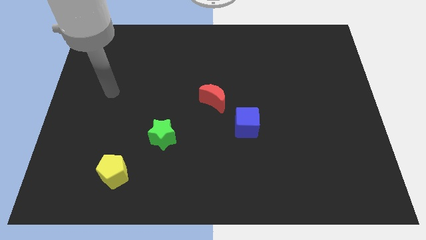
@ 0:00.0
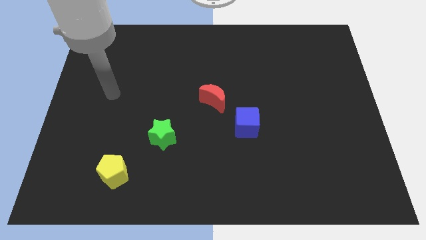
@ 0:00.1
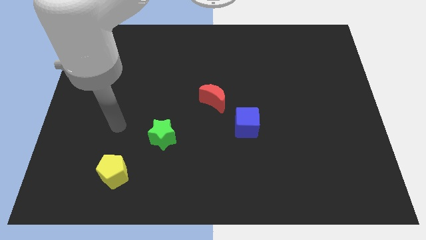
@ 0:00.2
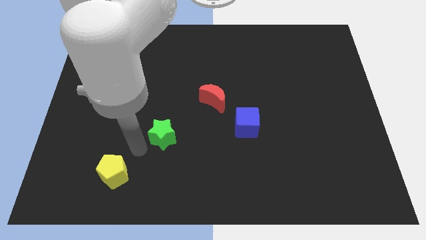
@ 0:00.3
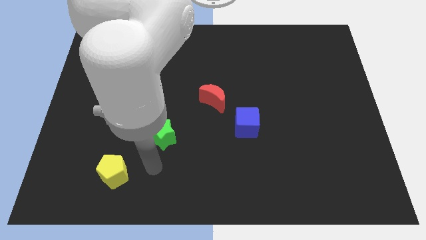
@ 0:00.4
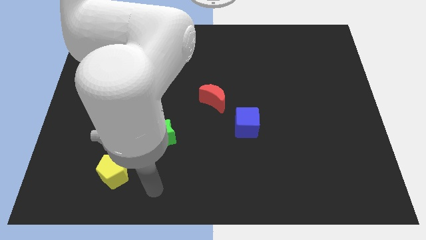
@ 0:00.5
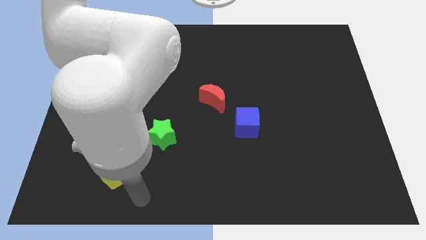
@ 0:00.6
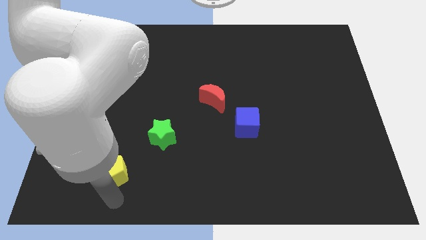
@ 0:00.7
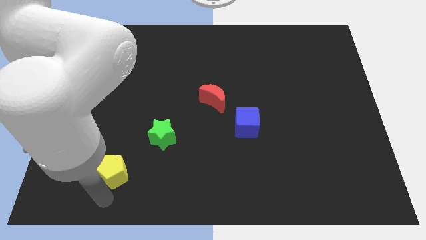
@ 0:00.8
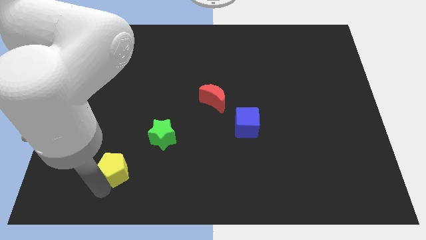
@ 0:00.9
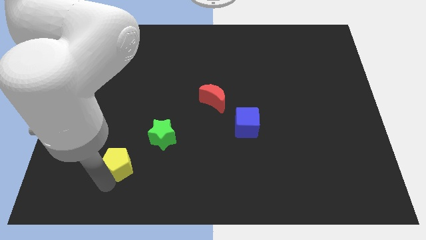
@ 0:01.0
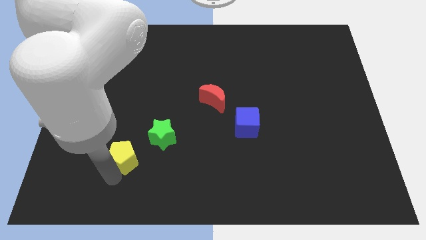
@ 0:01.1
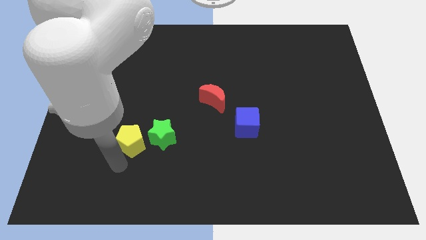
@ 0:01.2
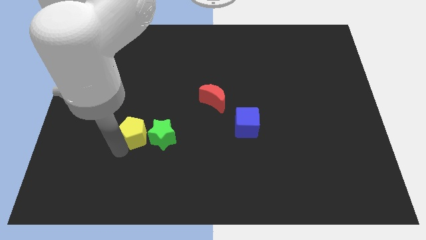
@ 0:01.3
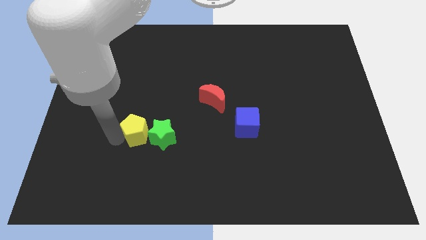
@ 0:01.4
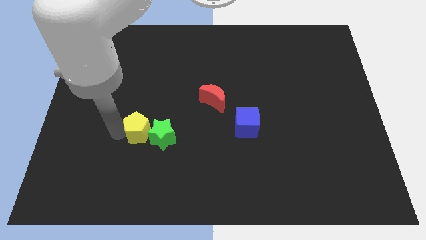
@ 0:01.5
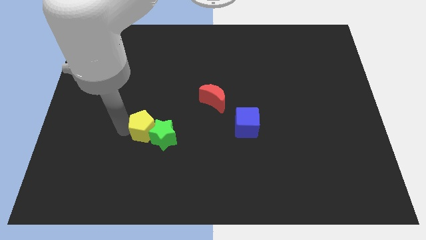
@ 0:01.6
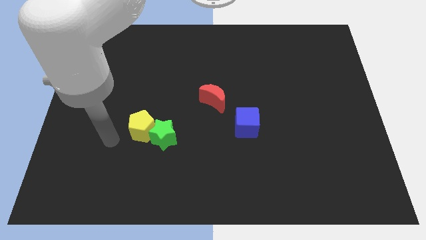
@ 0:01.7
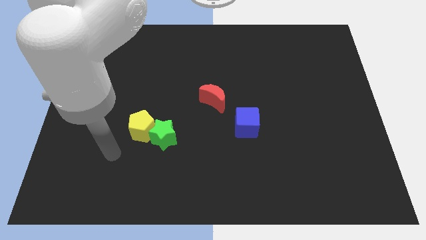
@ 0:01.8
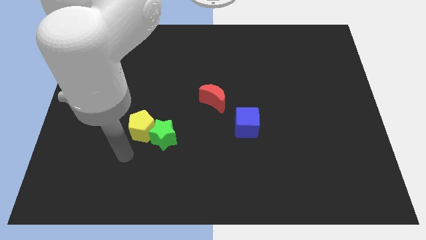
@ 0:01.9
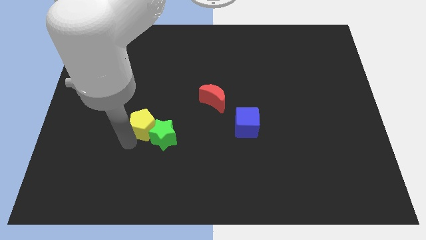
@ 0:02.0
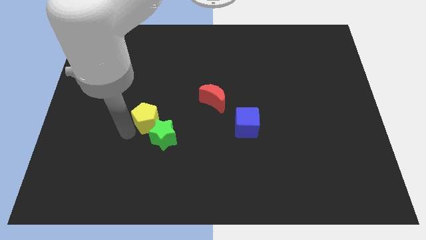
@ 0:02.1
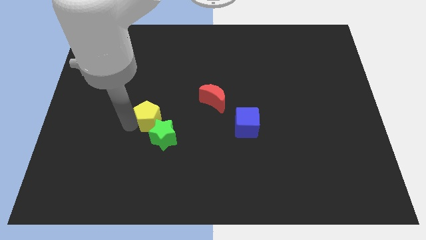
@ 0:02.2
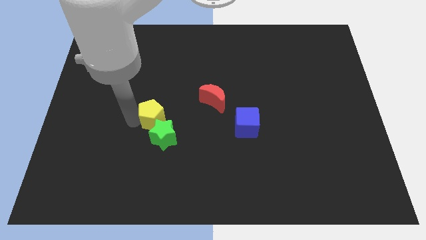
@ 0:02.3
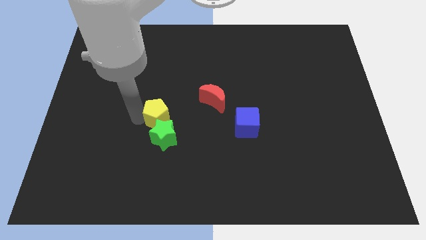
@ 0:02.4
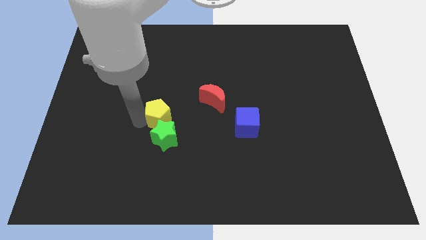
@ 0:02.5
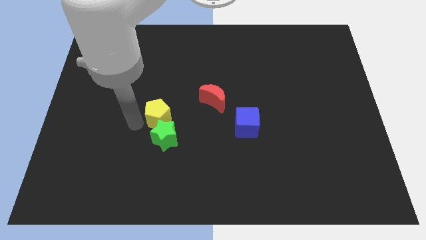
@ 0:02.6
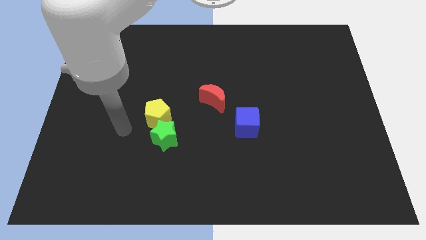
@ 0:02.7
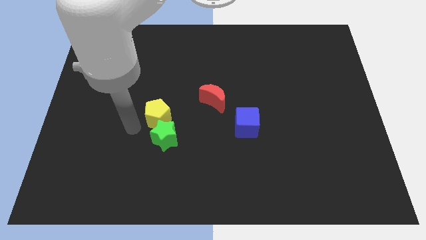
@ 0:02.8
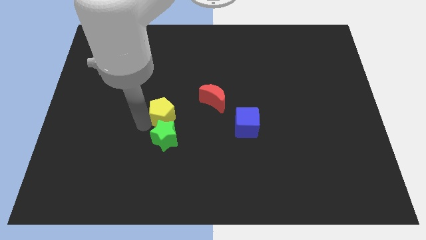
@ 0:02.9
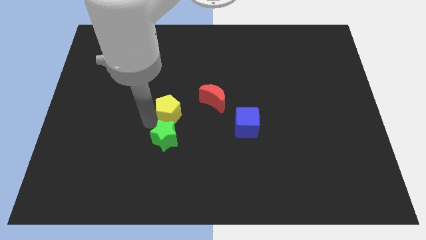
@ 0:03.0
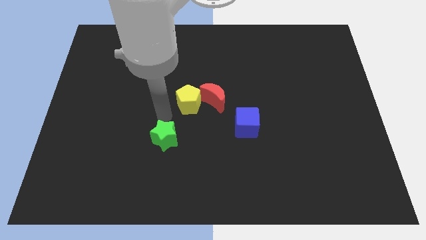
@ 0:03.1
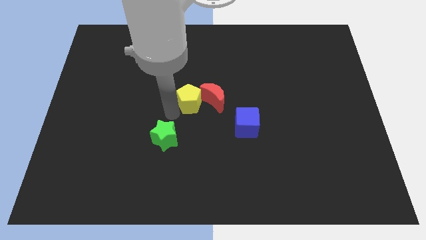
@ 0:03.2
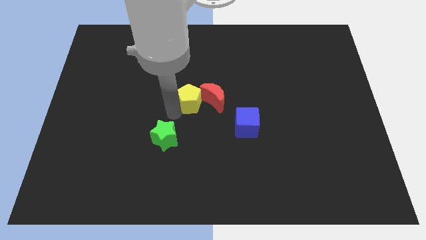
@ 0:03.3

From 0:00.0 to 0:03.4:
put the pentagon close to the red block

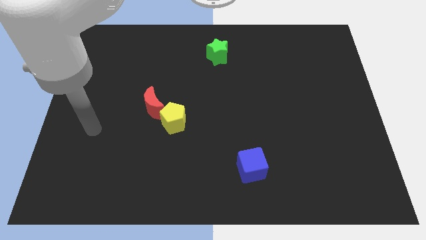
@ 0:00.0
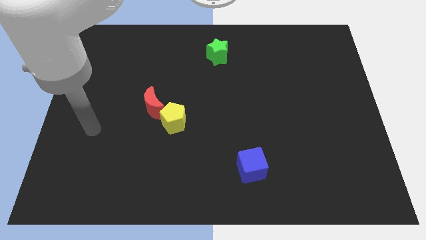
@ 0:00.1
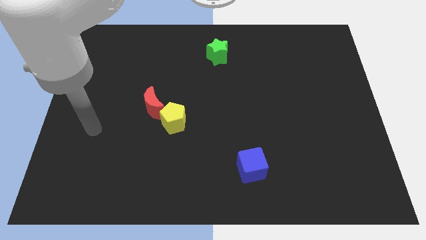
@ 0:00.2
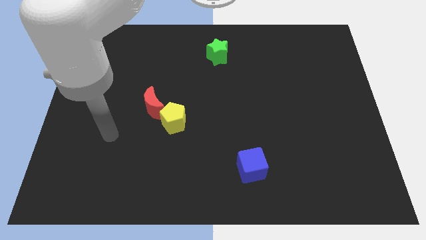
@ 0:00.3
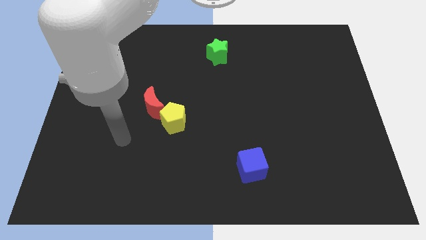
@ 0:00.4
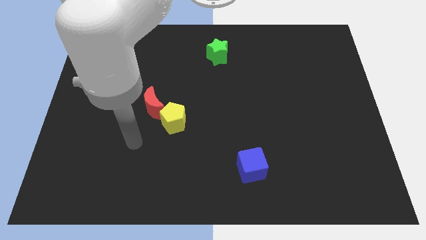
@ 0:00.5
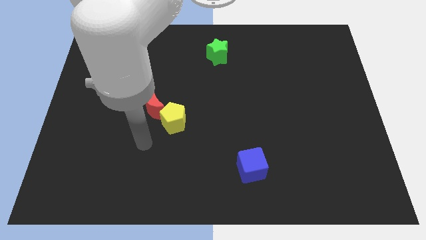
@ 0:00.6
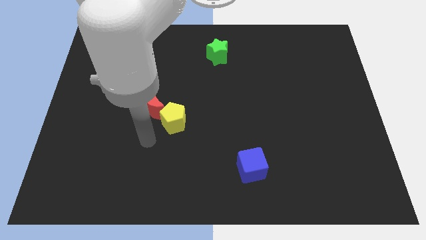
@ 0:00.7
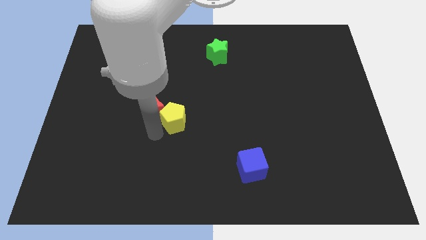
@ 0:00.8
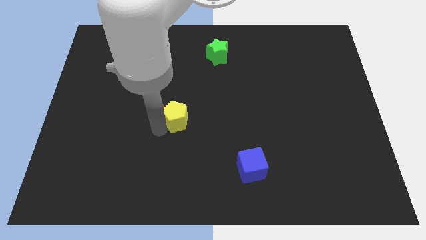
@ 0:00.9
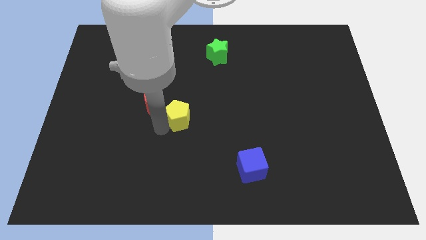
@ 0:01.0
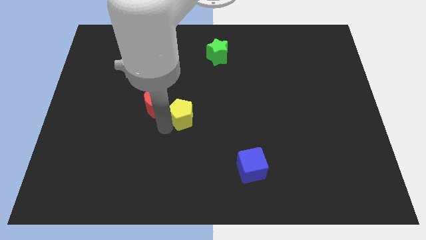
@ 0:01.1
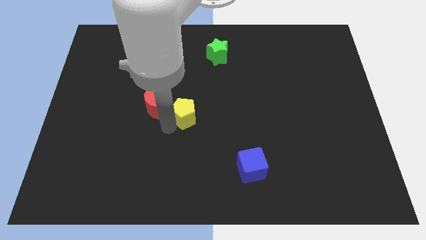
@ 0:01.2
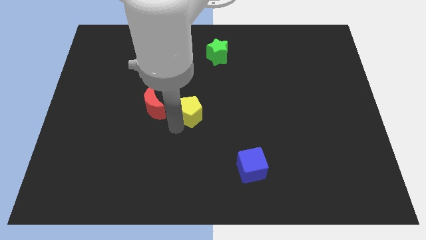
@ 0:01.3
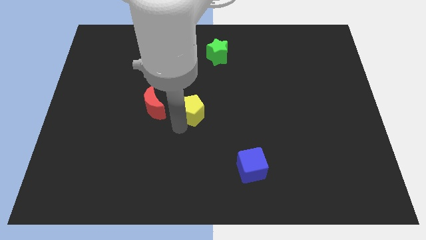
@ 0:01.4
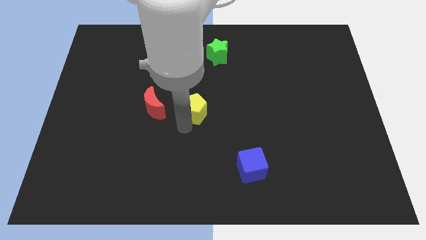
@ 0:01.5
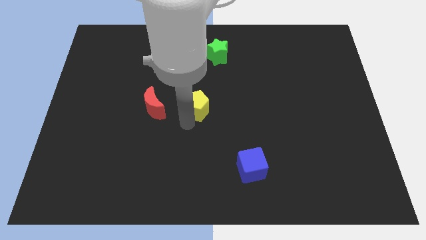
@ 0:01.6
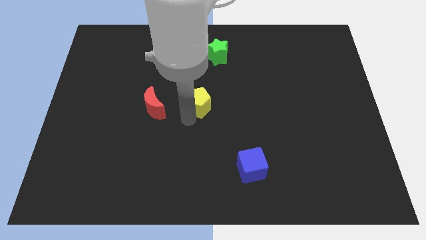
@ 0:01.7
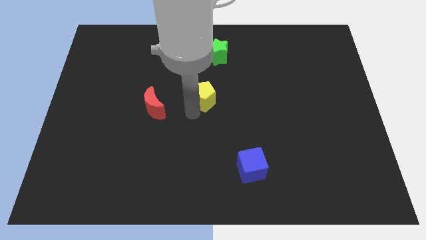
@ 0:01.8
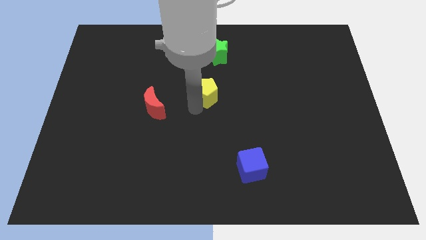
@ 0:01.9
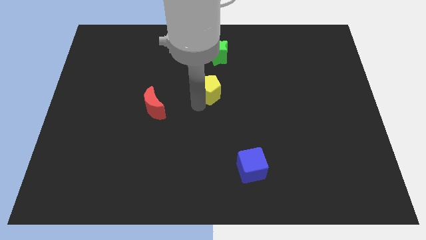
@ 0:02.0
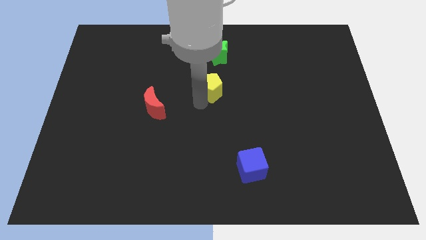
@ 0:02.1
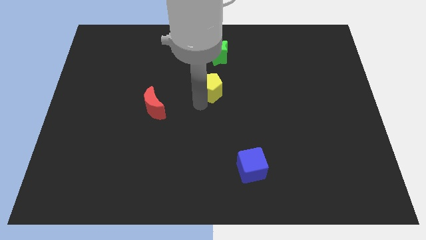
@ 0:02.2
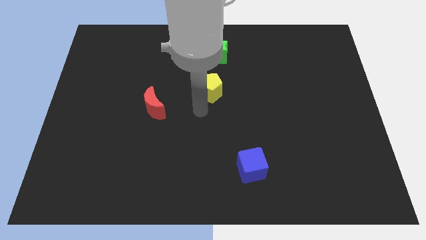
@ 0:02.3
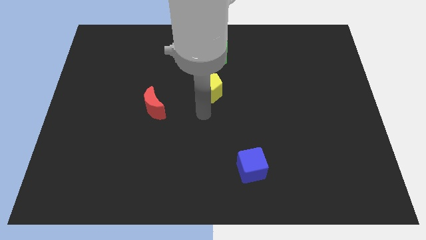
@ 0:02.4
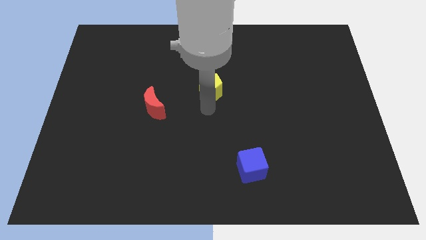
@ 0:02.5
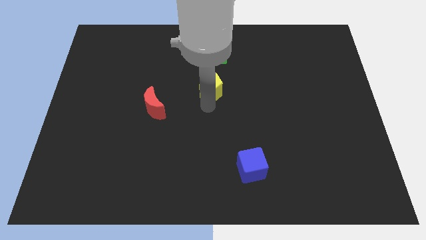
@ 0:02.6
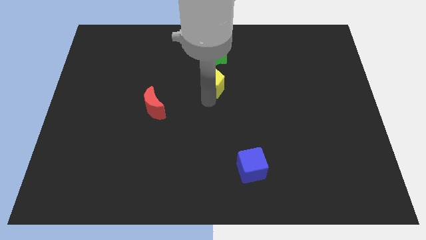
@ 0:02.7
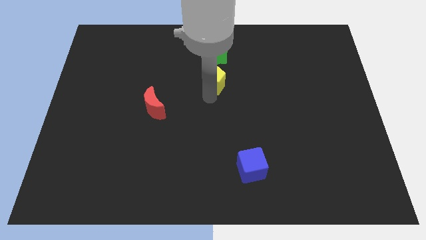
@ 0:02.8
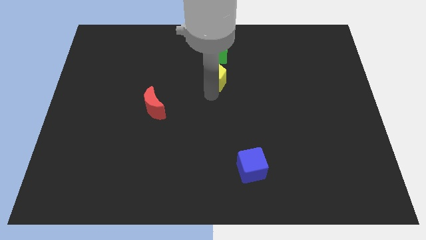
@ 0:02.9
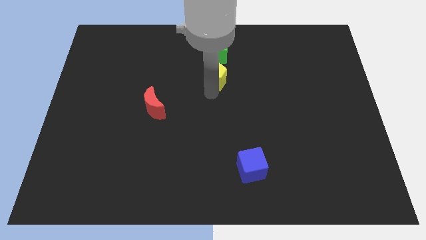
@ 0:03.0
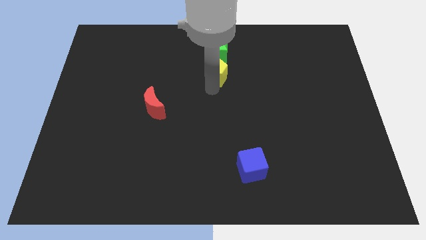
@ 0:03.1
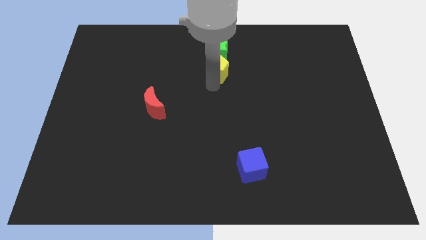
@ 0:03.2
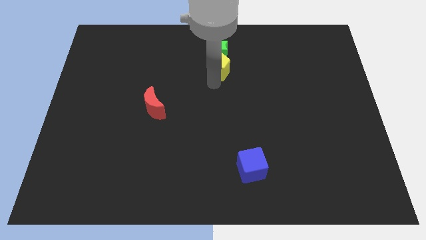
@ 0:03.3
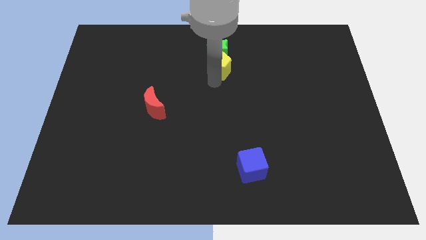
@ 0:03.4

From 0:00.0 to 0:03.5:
slide the yellow pentagon towards the green star

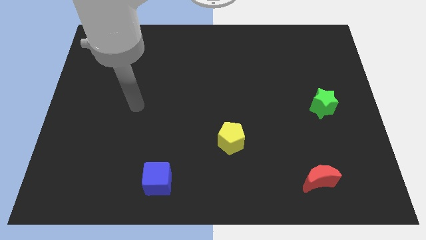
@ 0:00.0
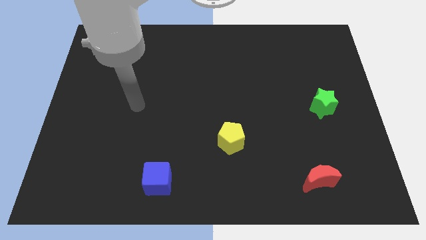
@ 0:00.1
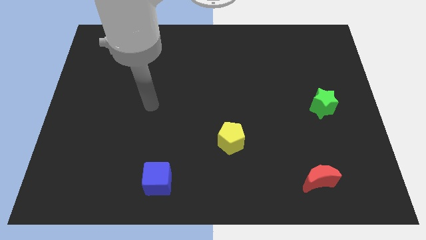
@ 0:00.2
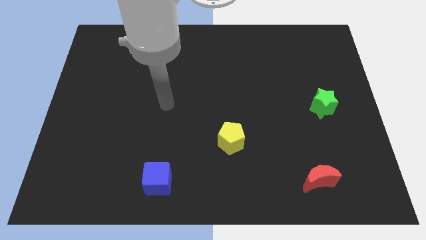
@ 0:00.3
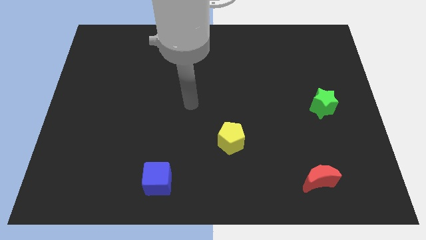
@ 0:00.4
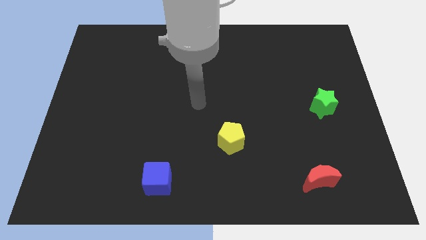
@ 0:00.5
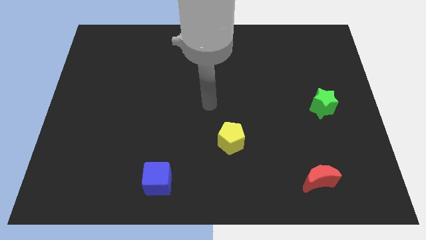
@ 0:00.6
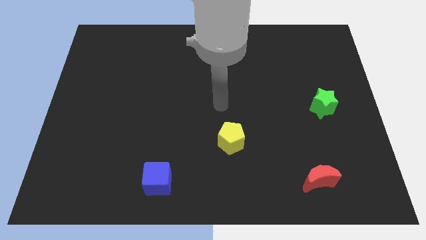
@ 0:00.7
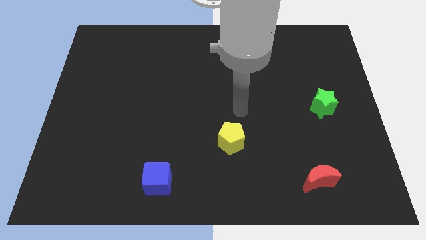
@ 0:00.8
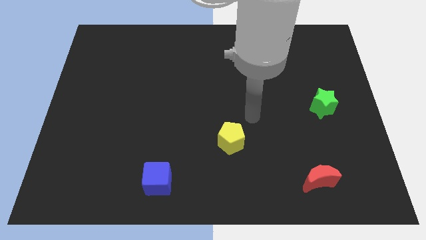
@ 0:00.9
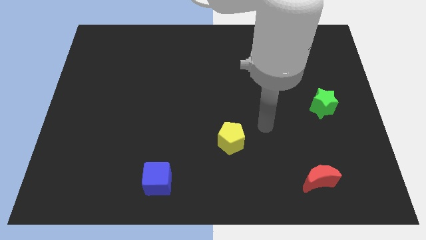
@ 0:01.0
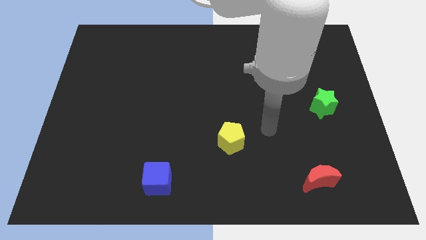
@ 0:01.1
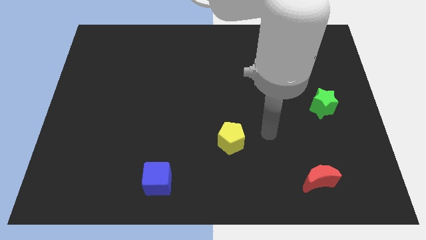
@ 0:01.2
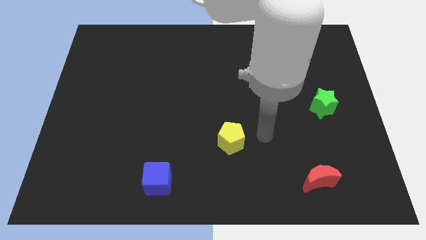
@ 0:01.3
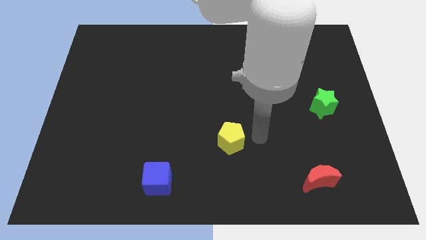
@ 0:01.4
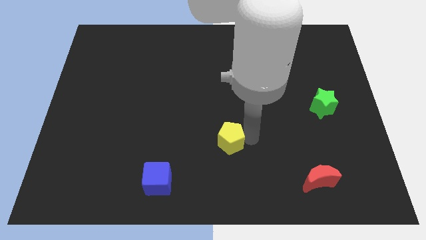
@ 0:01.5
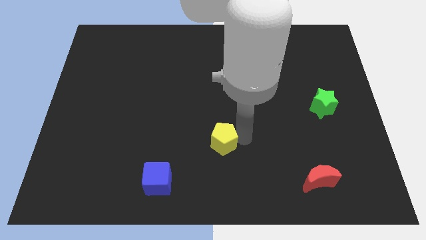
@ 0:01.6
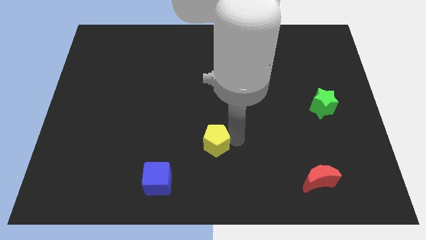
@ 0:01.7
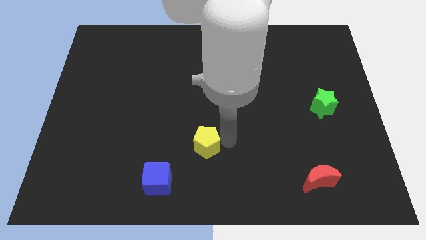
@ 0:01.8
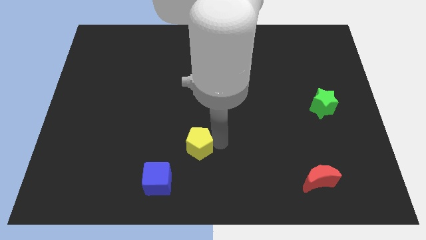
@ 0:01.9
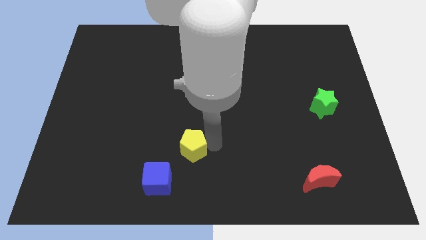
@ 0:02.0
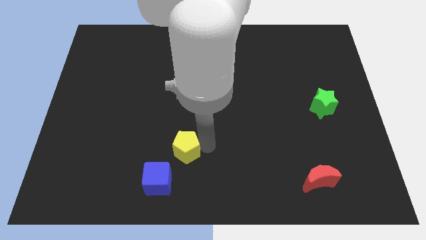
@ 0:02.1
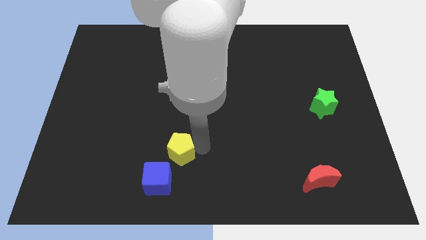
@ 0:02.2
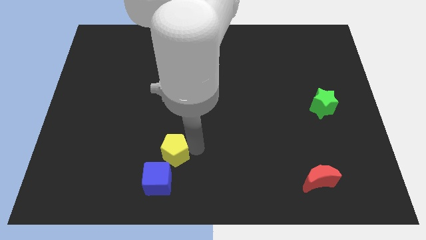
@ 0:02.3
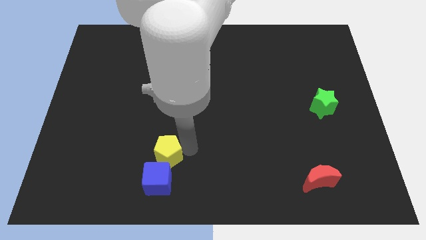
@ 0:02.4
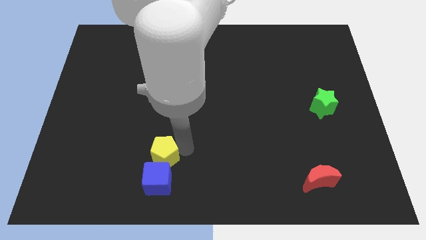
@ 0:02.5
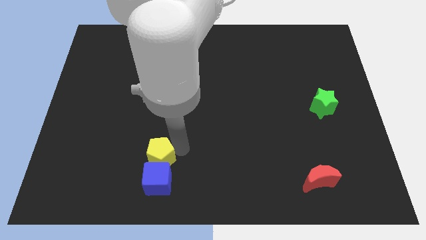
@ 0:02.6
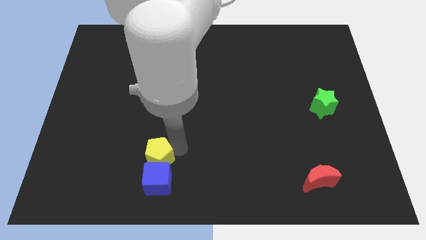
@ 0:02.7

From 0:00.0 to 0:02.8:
move the yellow block towards the blue block
